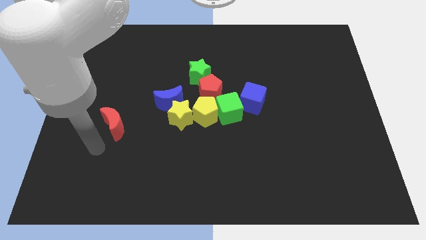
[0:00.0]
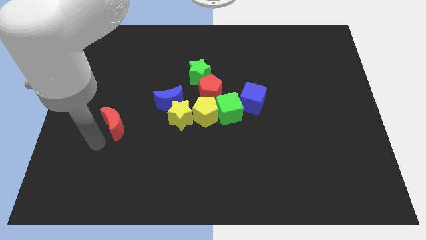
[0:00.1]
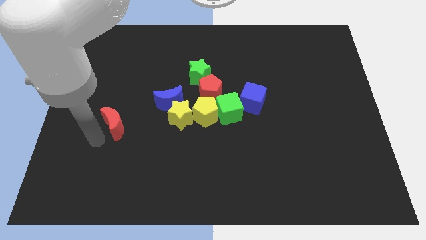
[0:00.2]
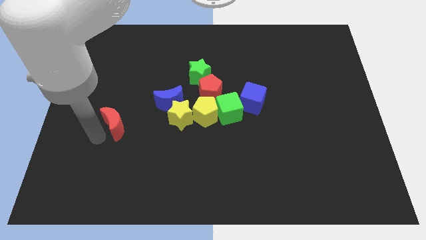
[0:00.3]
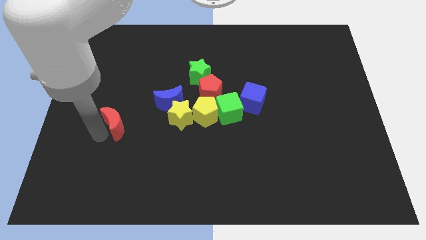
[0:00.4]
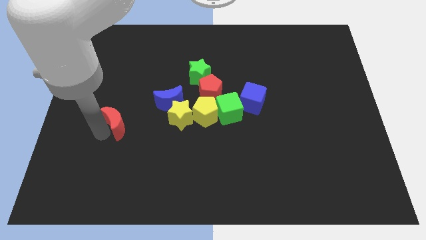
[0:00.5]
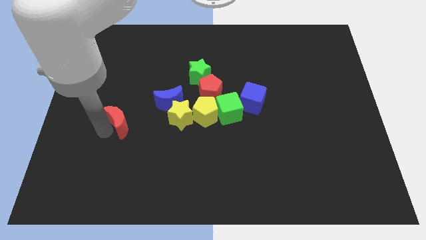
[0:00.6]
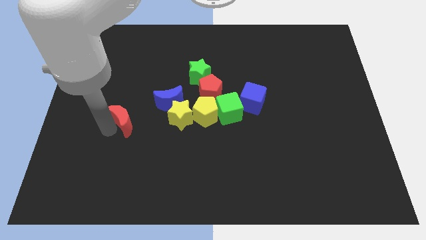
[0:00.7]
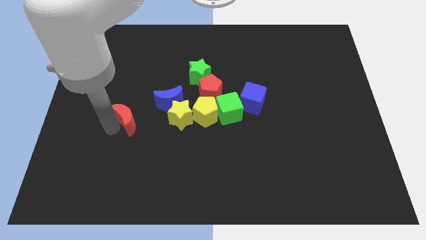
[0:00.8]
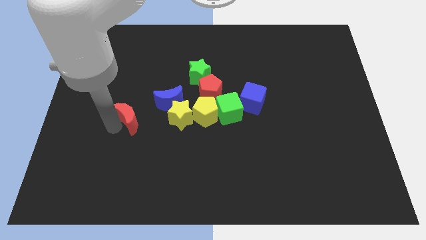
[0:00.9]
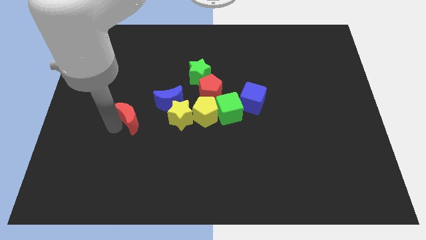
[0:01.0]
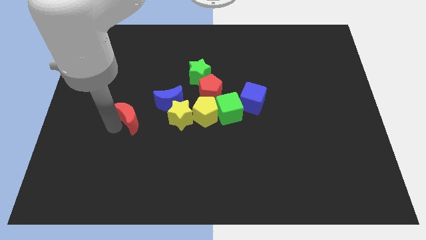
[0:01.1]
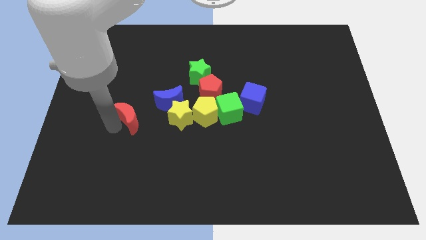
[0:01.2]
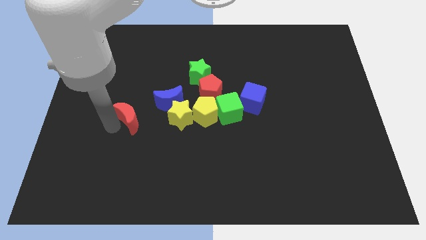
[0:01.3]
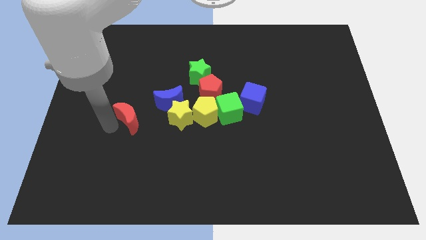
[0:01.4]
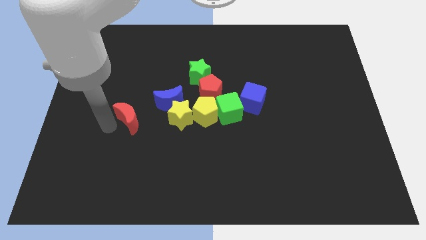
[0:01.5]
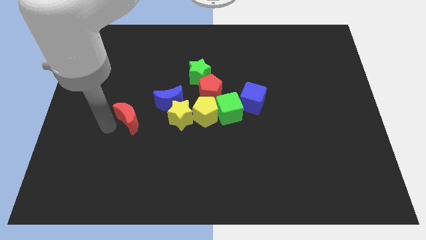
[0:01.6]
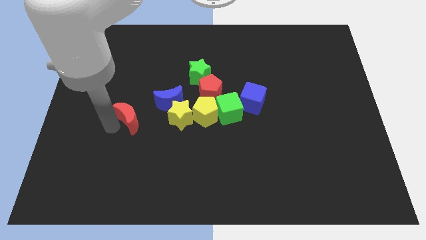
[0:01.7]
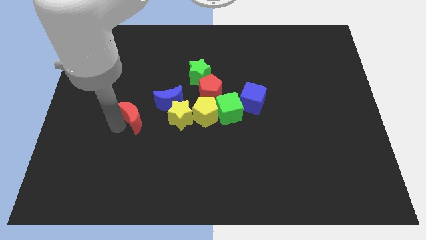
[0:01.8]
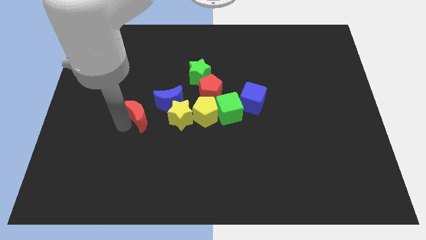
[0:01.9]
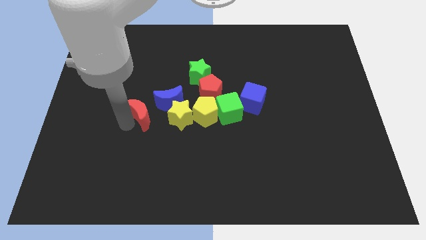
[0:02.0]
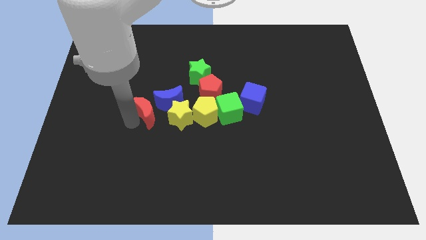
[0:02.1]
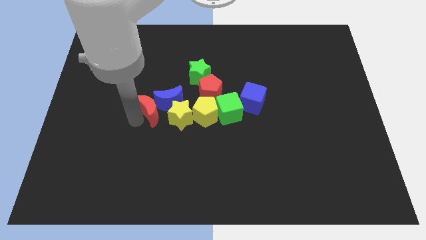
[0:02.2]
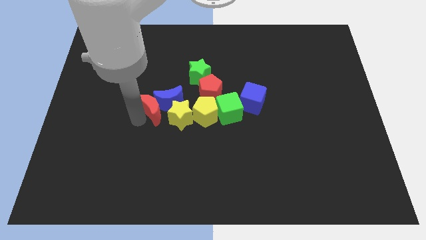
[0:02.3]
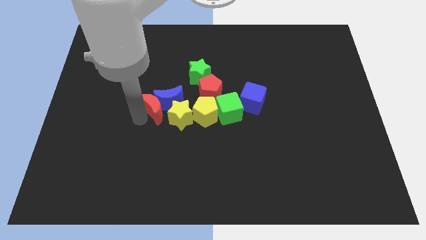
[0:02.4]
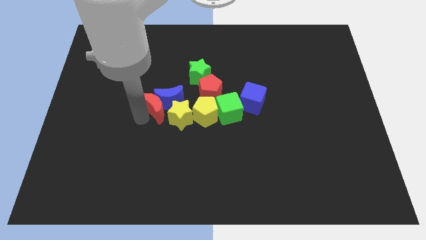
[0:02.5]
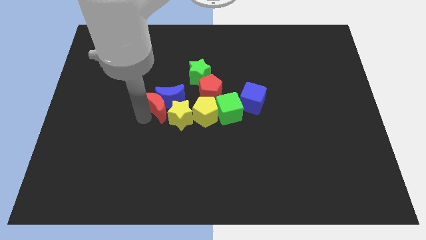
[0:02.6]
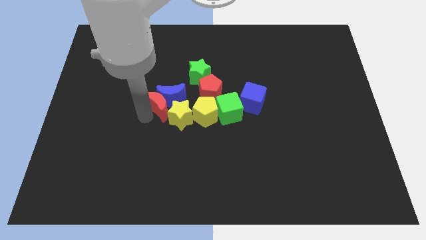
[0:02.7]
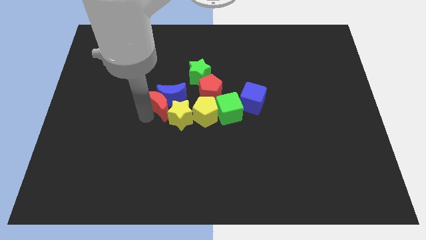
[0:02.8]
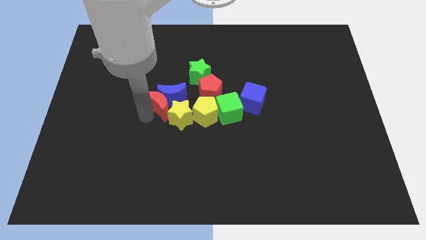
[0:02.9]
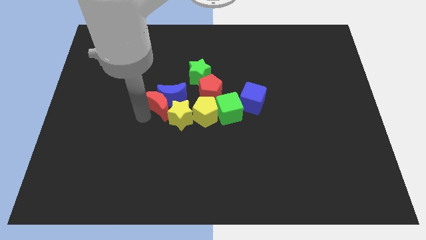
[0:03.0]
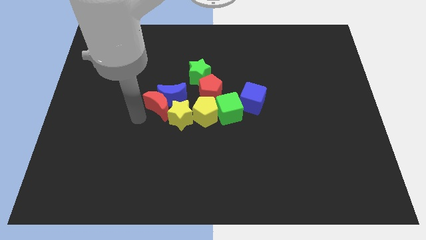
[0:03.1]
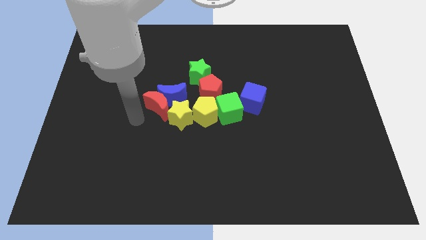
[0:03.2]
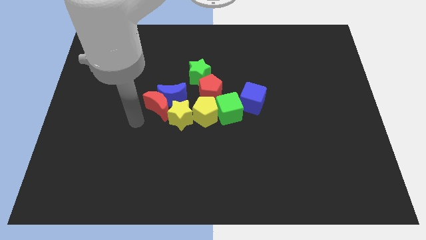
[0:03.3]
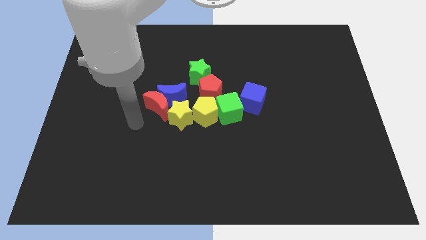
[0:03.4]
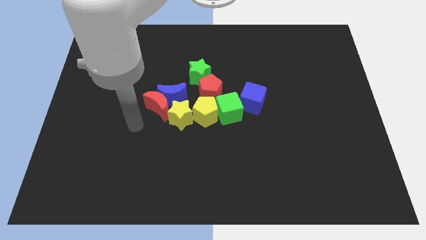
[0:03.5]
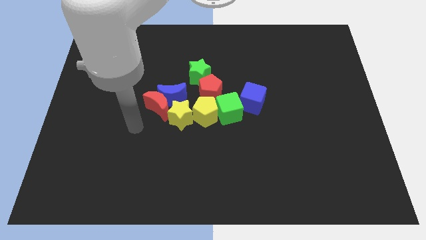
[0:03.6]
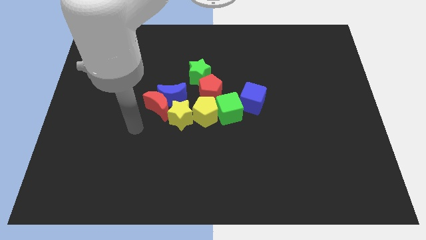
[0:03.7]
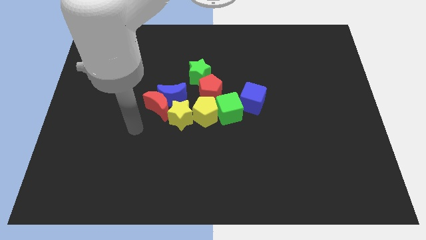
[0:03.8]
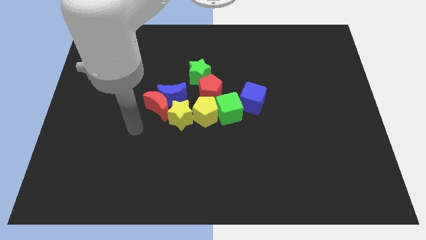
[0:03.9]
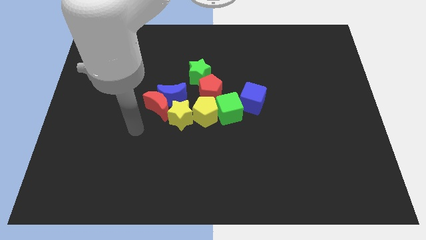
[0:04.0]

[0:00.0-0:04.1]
move red crescent into the blue crescent

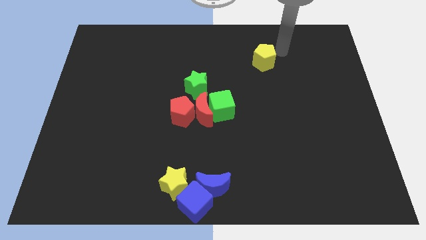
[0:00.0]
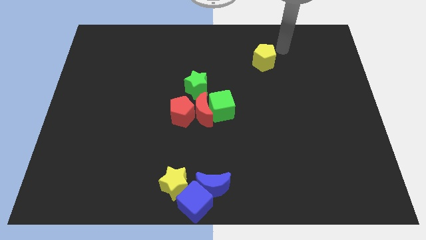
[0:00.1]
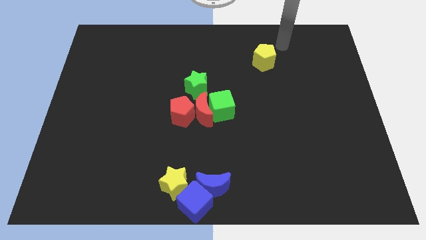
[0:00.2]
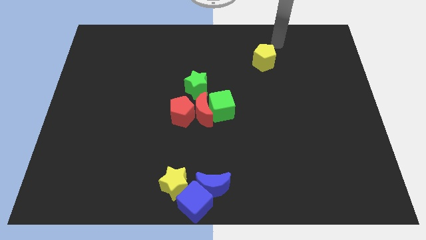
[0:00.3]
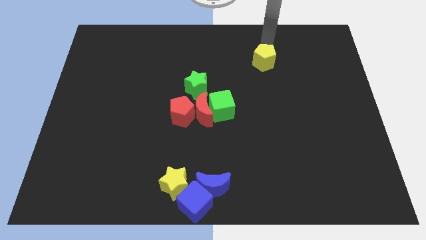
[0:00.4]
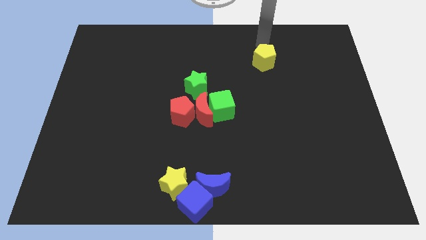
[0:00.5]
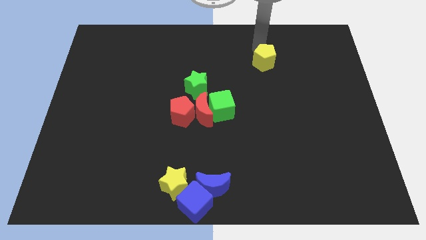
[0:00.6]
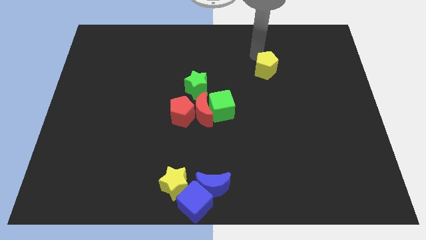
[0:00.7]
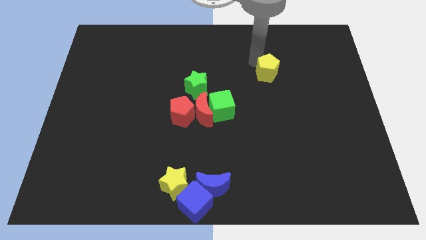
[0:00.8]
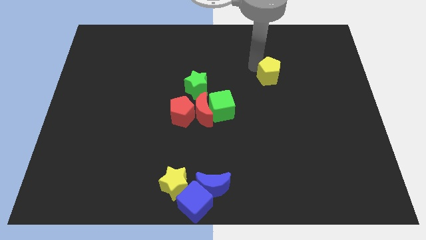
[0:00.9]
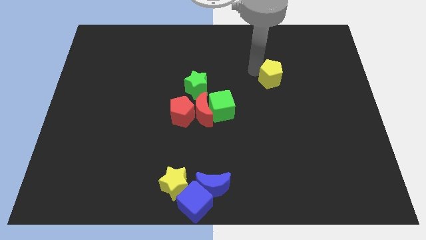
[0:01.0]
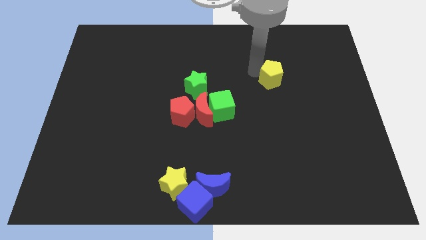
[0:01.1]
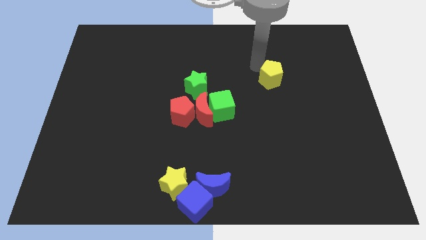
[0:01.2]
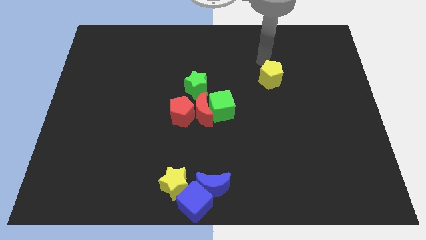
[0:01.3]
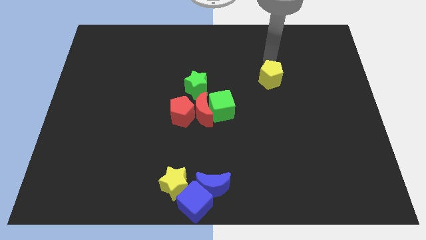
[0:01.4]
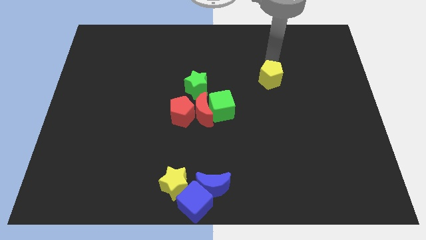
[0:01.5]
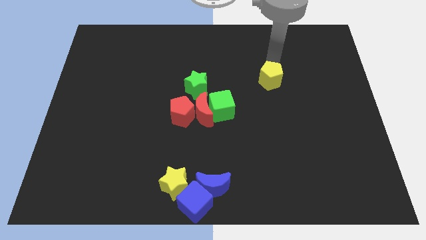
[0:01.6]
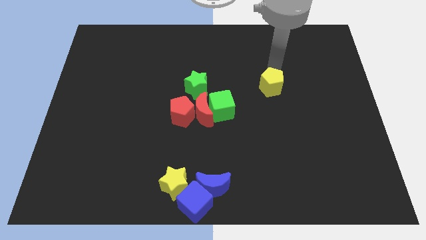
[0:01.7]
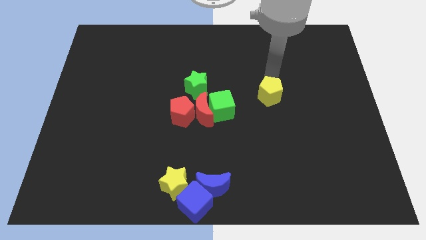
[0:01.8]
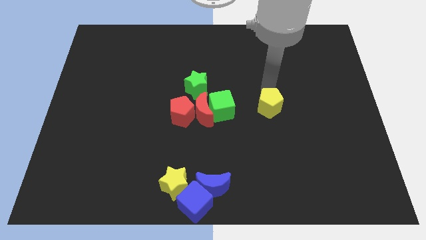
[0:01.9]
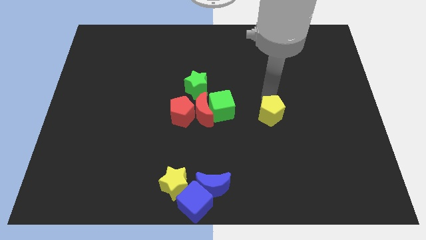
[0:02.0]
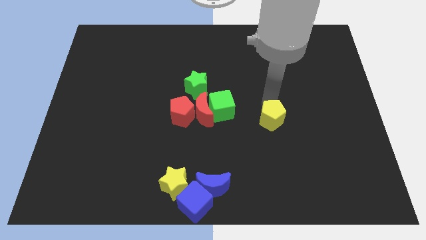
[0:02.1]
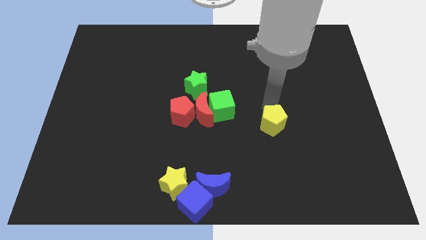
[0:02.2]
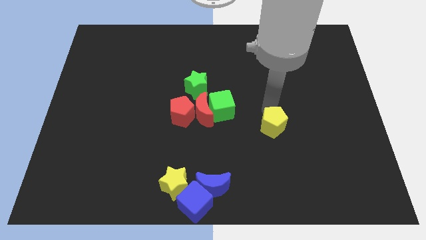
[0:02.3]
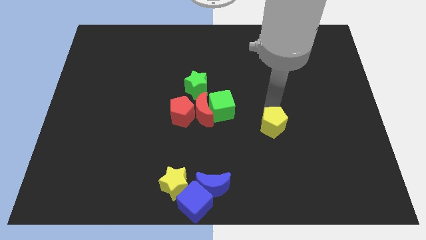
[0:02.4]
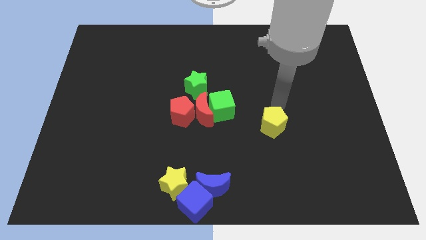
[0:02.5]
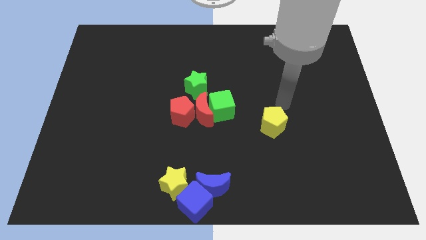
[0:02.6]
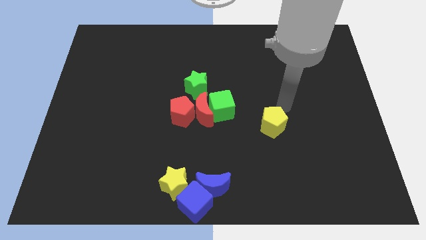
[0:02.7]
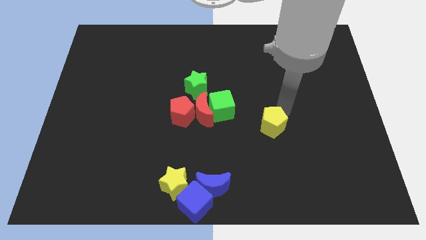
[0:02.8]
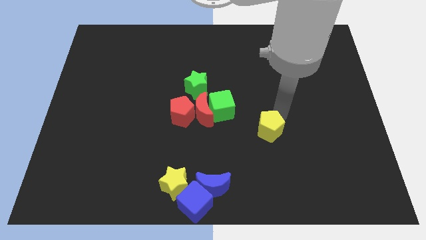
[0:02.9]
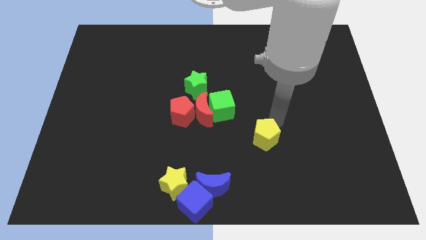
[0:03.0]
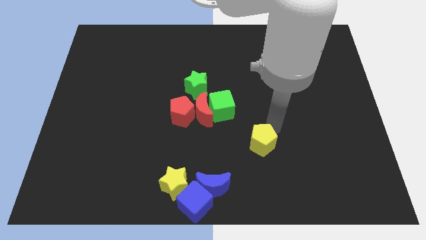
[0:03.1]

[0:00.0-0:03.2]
move the yellow pentagon to the bottom right of the green cube

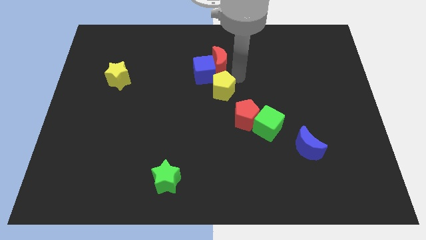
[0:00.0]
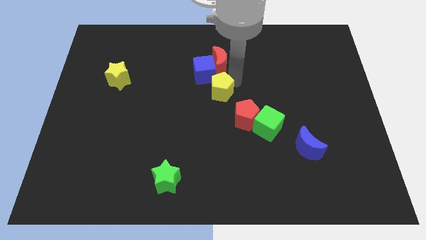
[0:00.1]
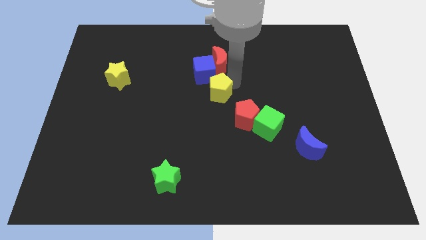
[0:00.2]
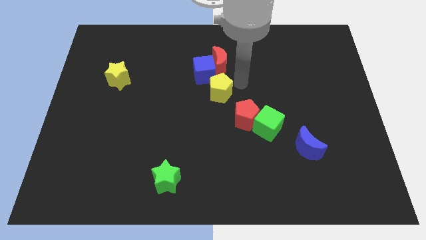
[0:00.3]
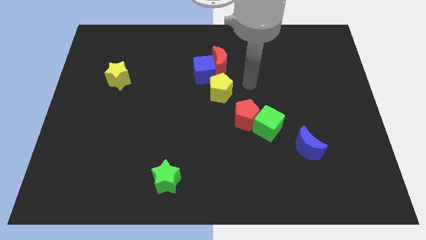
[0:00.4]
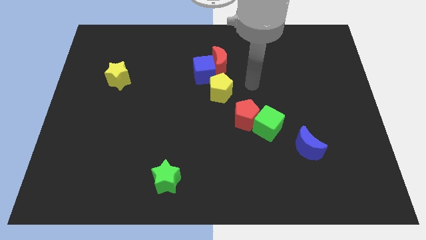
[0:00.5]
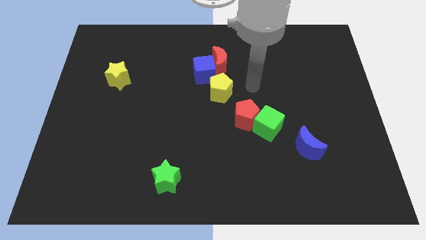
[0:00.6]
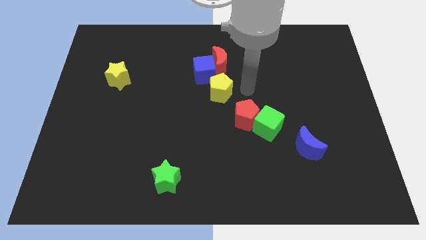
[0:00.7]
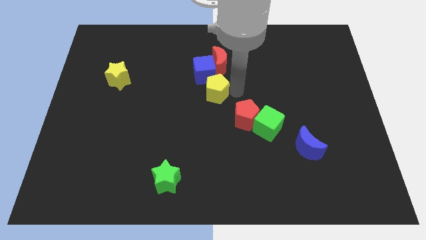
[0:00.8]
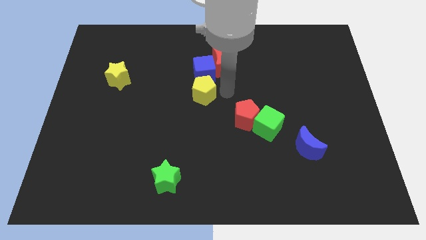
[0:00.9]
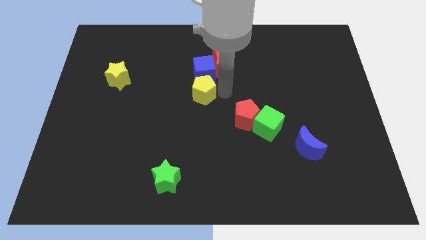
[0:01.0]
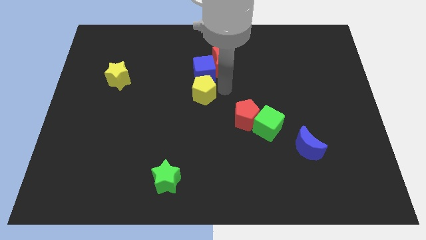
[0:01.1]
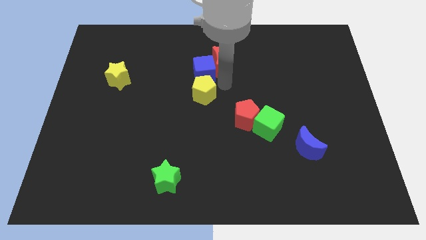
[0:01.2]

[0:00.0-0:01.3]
move the yellow pentagon to the bottom side of the blue cube

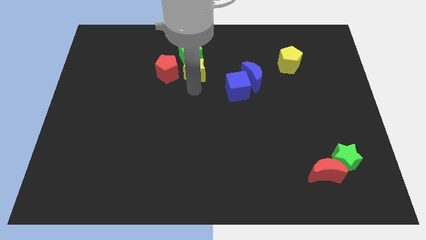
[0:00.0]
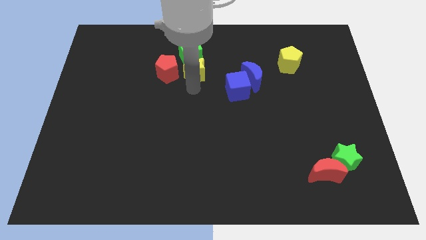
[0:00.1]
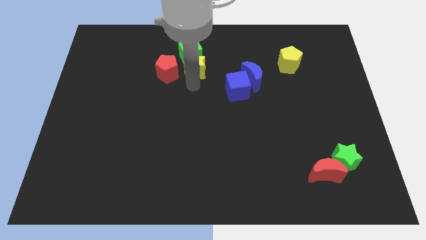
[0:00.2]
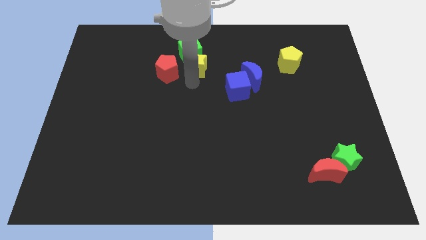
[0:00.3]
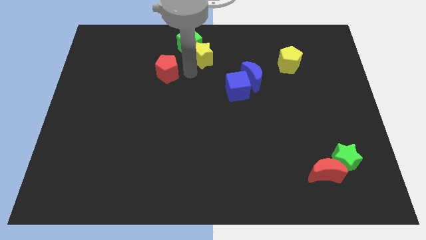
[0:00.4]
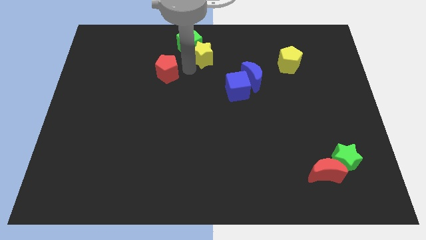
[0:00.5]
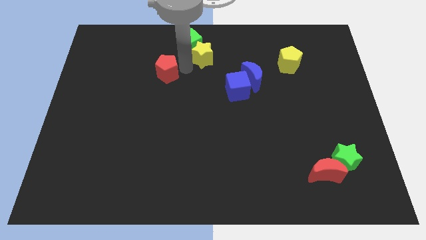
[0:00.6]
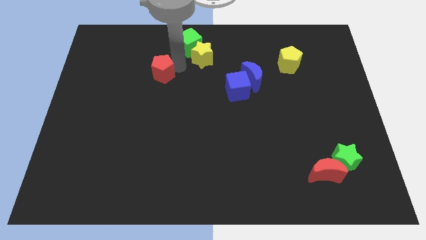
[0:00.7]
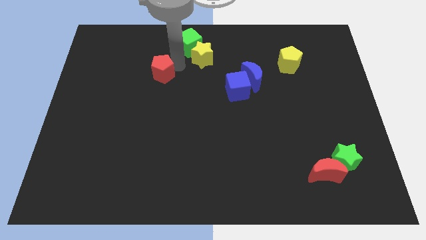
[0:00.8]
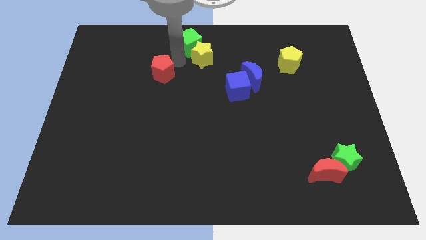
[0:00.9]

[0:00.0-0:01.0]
push the yellow star into the green cube
